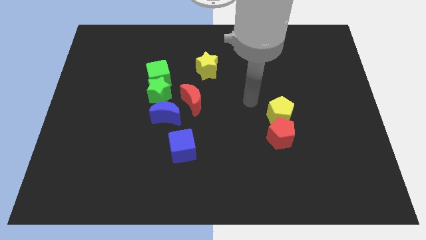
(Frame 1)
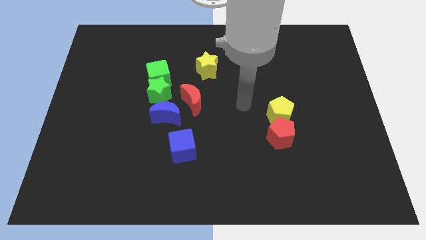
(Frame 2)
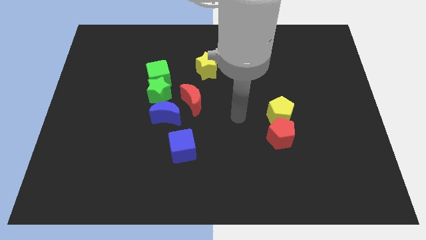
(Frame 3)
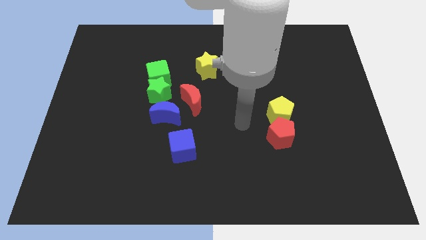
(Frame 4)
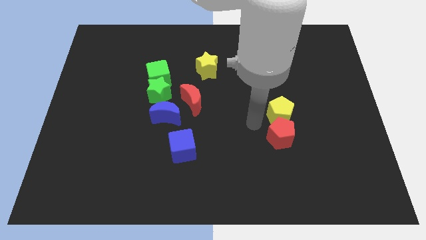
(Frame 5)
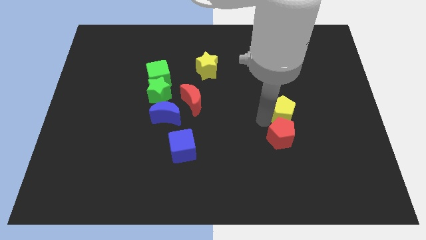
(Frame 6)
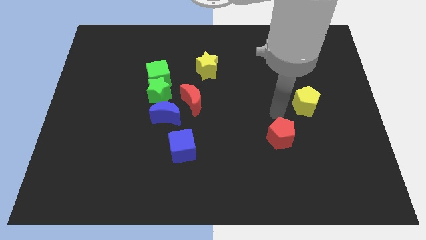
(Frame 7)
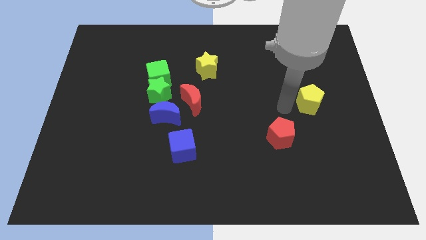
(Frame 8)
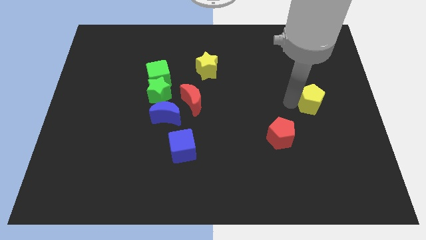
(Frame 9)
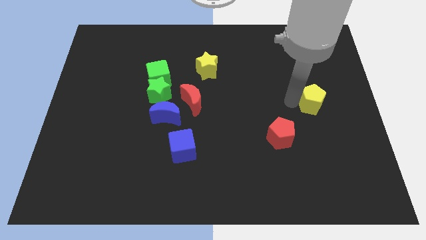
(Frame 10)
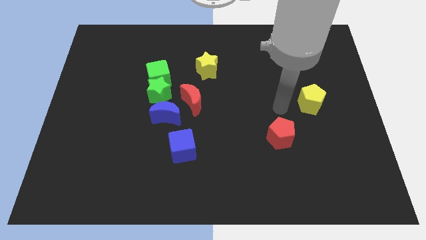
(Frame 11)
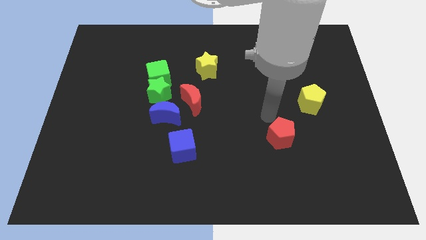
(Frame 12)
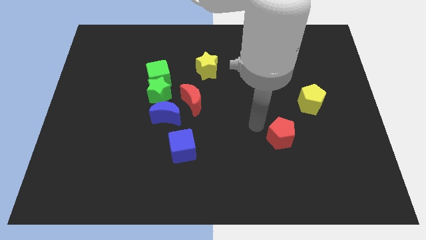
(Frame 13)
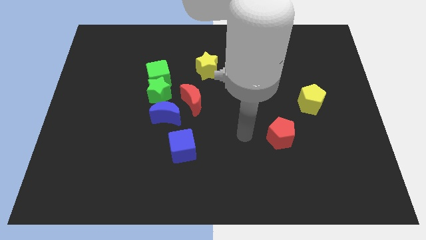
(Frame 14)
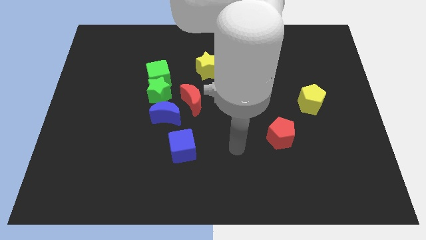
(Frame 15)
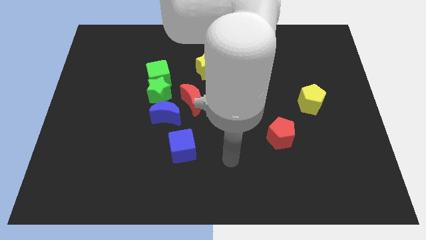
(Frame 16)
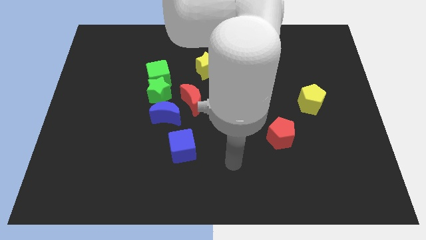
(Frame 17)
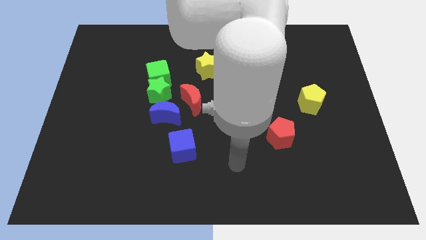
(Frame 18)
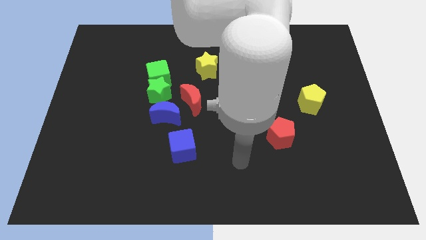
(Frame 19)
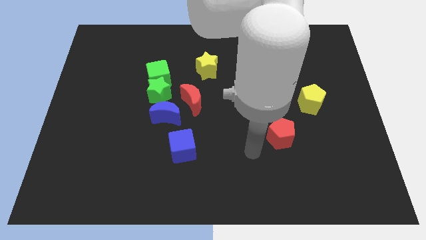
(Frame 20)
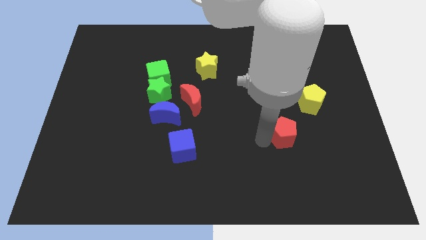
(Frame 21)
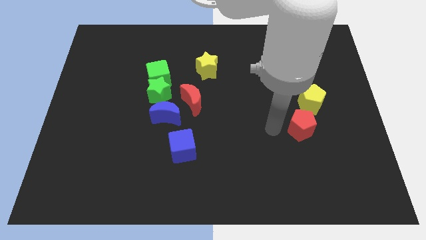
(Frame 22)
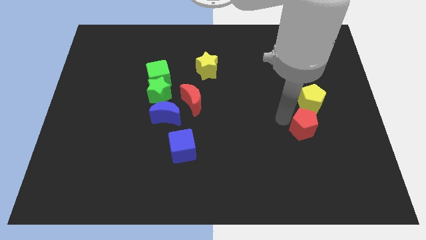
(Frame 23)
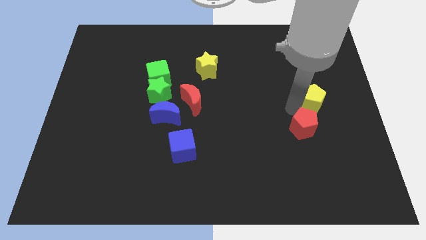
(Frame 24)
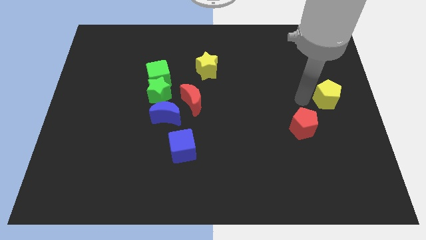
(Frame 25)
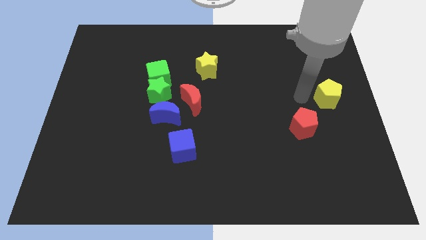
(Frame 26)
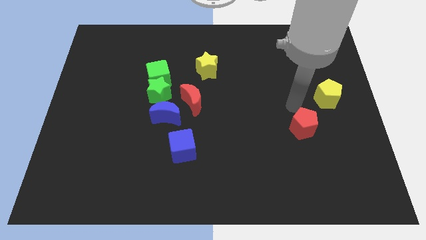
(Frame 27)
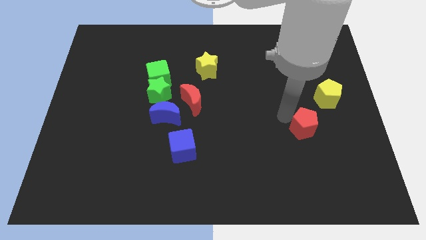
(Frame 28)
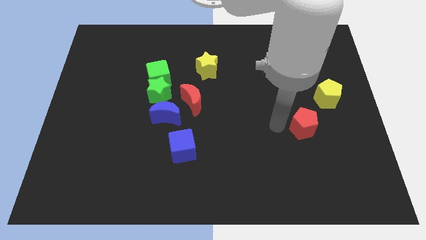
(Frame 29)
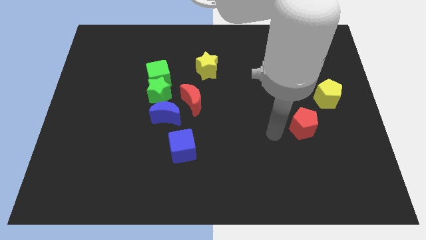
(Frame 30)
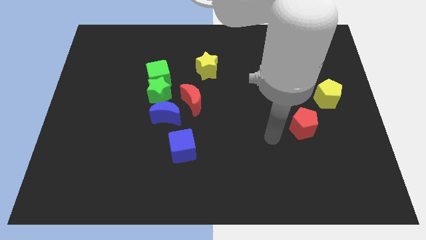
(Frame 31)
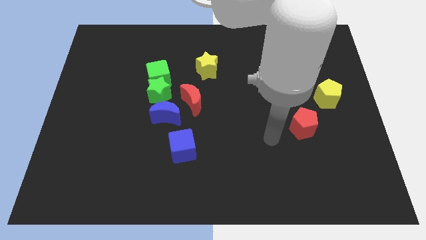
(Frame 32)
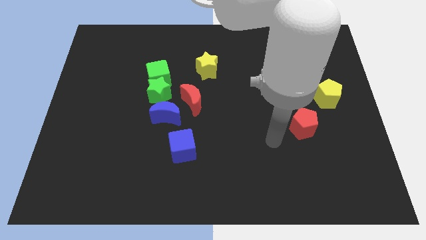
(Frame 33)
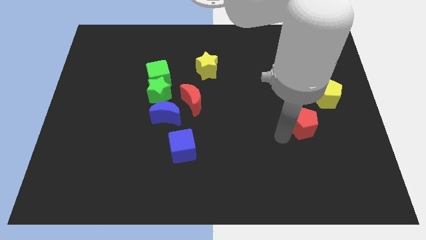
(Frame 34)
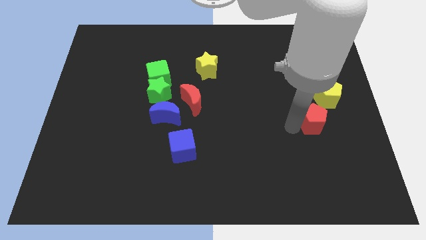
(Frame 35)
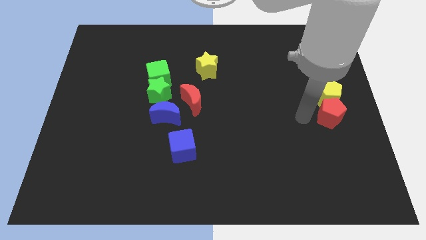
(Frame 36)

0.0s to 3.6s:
push red pentagon and yellow pentagon towards center right

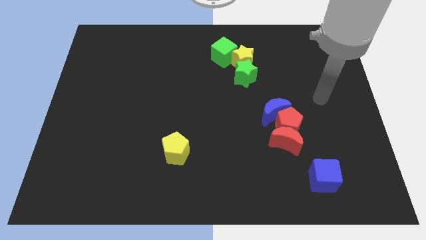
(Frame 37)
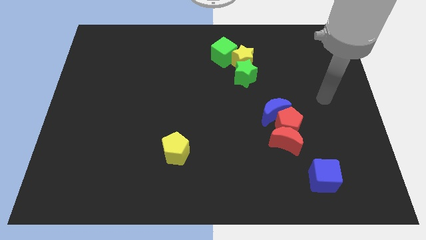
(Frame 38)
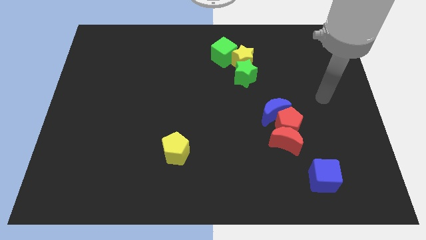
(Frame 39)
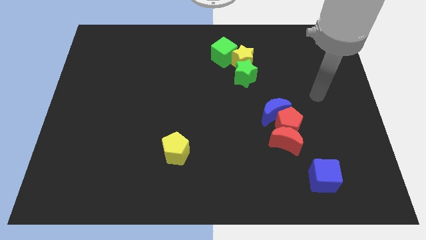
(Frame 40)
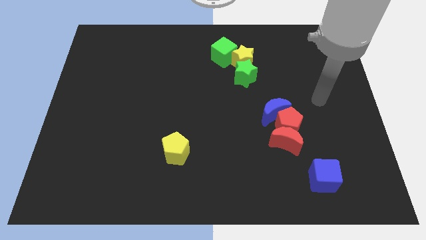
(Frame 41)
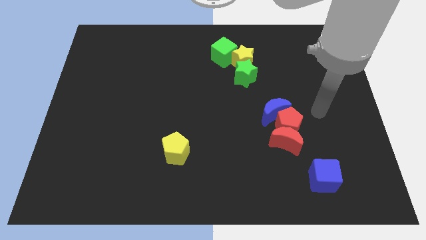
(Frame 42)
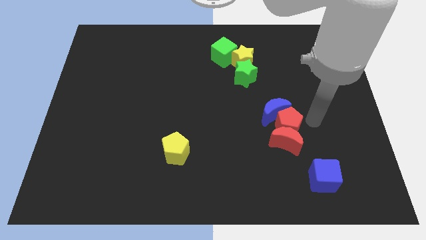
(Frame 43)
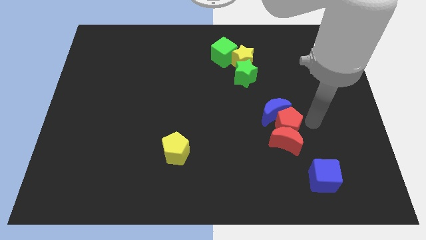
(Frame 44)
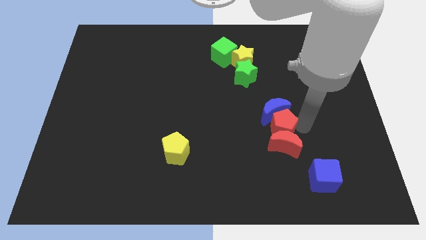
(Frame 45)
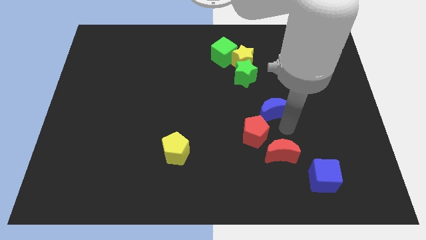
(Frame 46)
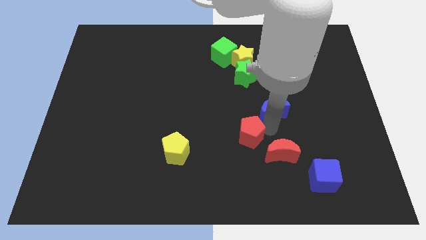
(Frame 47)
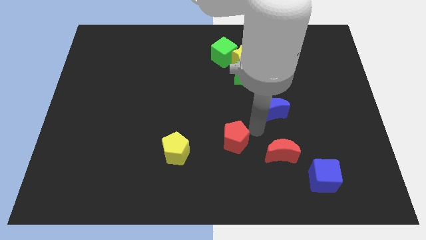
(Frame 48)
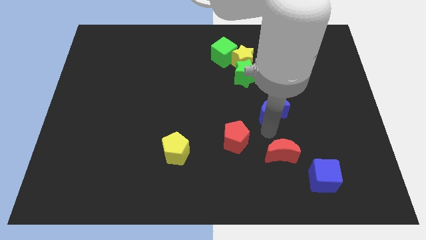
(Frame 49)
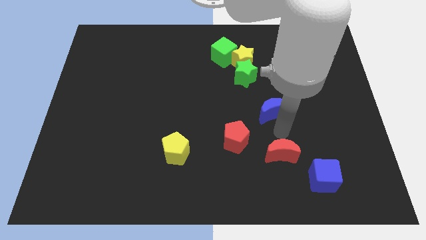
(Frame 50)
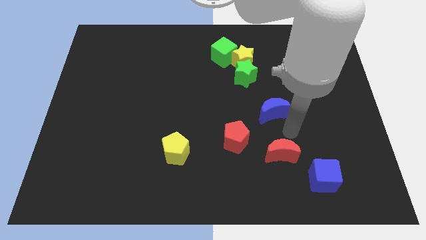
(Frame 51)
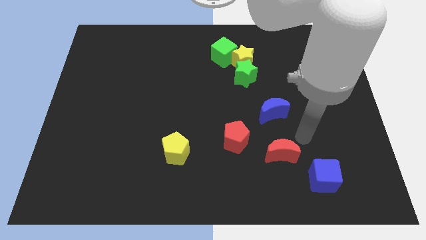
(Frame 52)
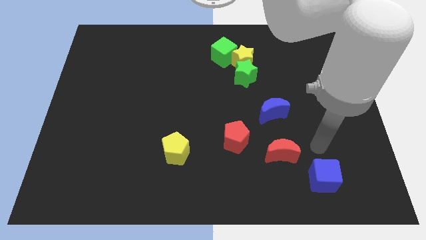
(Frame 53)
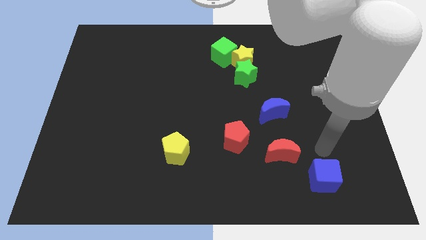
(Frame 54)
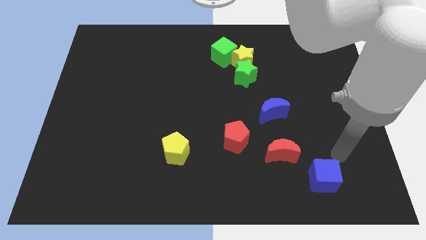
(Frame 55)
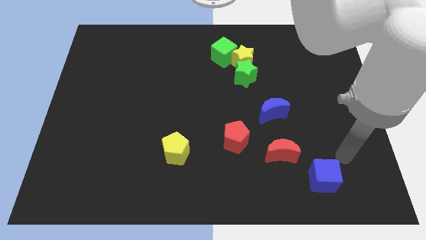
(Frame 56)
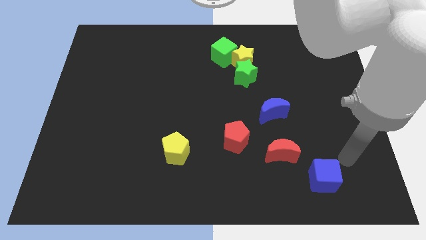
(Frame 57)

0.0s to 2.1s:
slide red pentagon towards the yellow pentagon

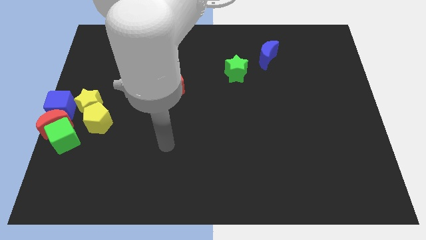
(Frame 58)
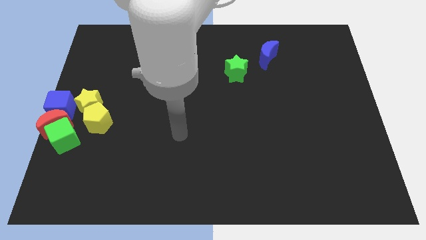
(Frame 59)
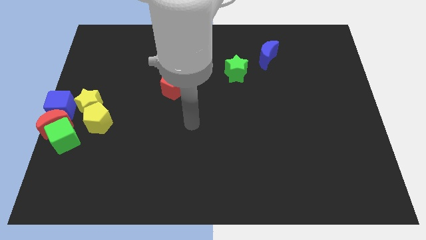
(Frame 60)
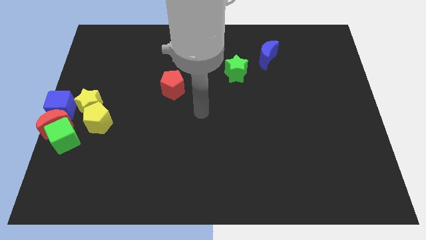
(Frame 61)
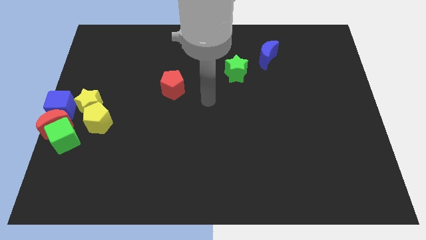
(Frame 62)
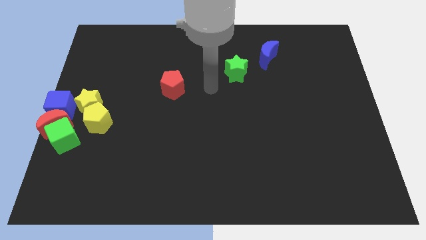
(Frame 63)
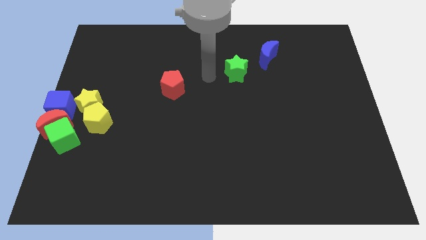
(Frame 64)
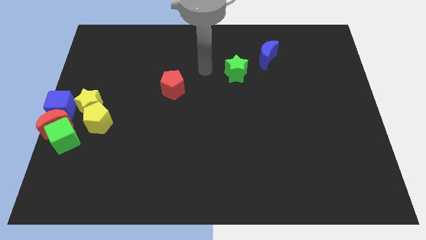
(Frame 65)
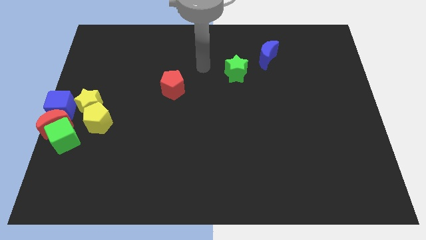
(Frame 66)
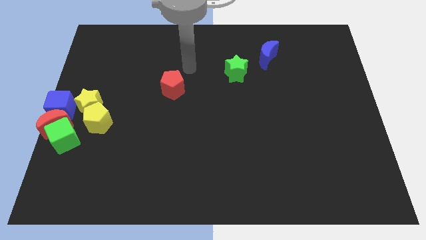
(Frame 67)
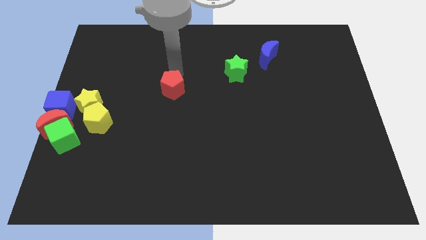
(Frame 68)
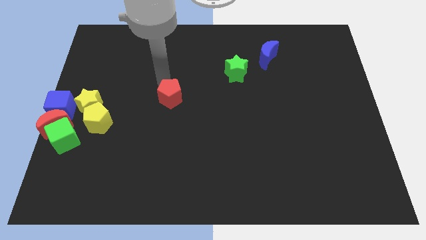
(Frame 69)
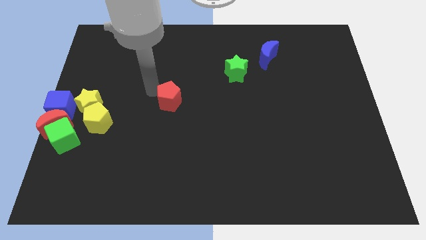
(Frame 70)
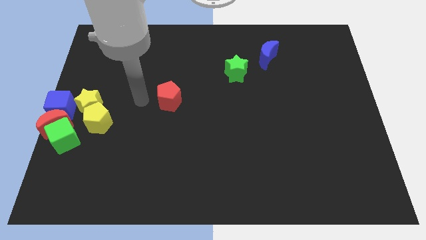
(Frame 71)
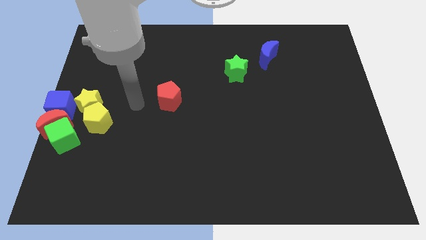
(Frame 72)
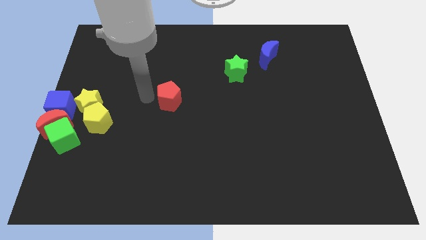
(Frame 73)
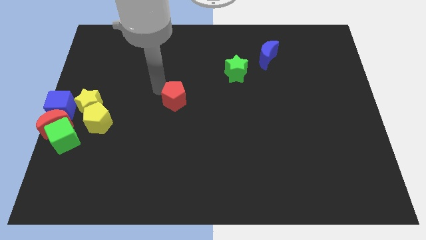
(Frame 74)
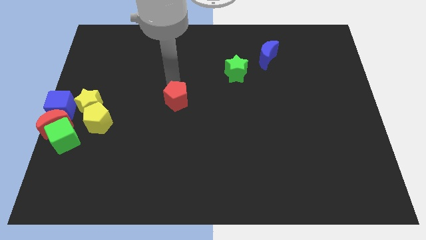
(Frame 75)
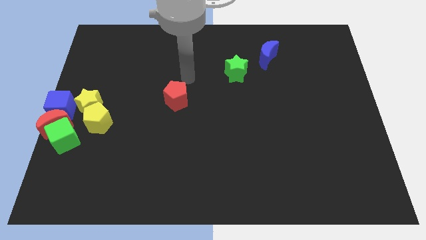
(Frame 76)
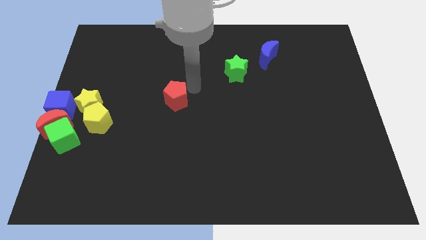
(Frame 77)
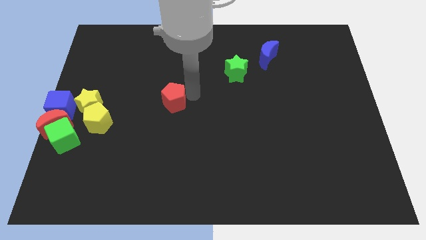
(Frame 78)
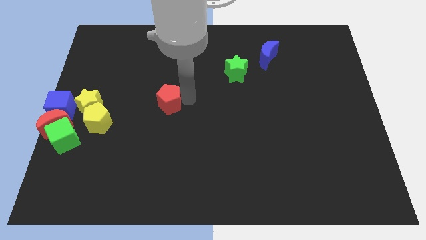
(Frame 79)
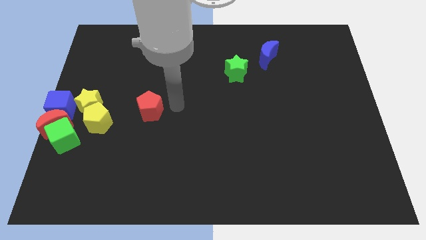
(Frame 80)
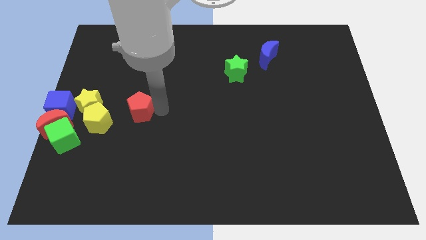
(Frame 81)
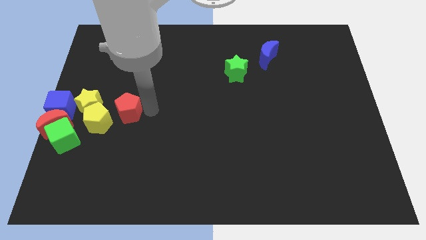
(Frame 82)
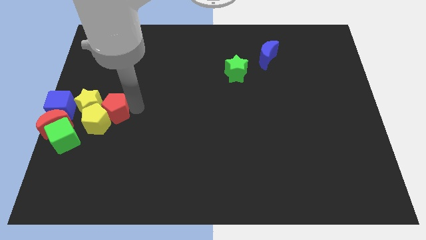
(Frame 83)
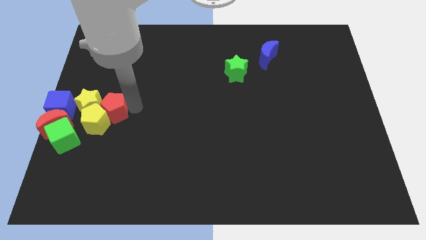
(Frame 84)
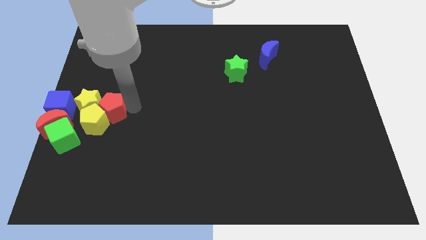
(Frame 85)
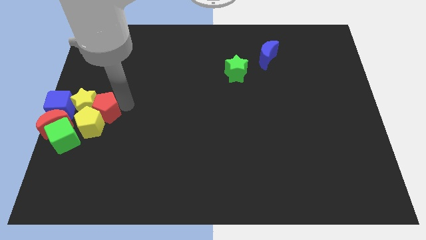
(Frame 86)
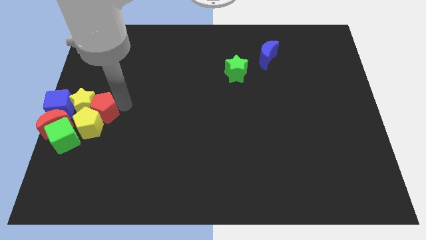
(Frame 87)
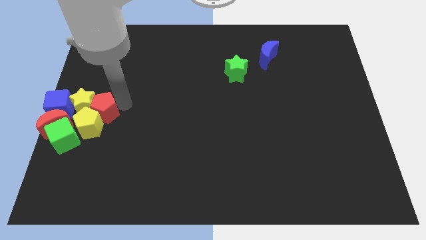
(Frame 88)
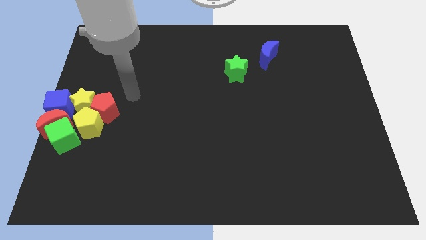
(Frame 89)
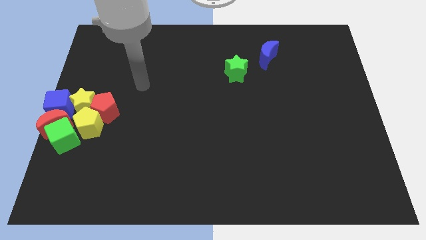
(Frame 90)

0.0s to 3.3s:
place the red pentagon right to the yellow star

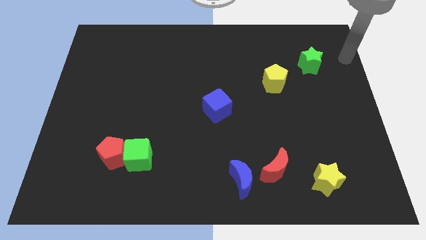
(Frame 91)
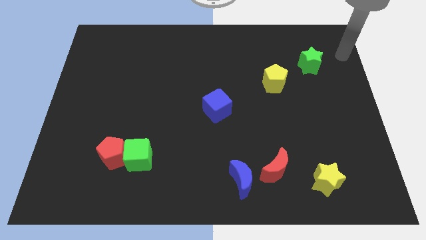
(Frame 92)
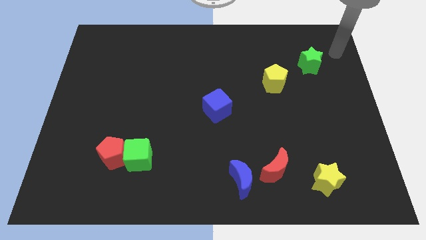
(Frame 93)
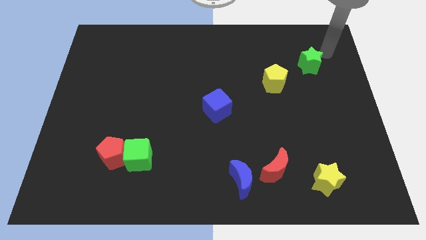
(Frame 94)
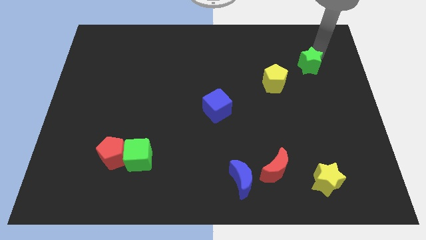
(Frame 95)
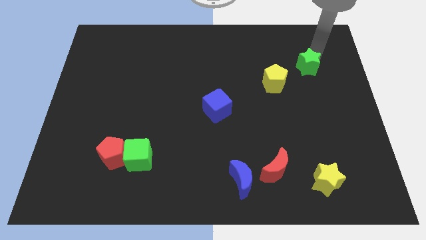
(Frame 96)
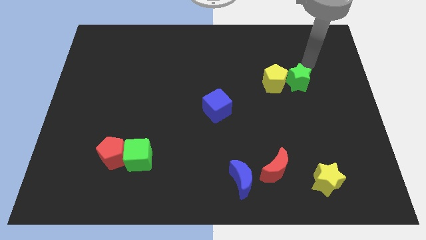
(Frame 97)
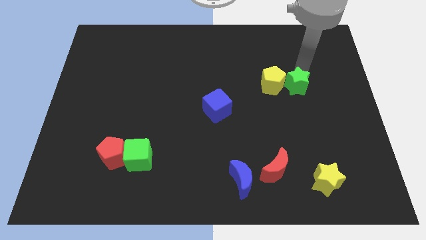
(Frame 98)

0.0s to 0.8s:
put the yellow star and the yellow pentagon together
